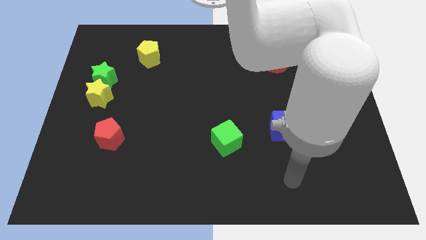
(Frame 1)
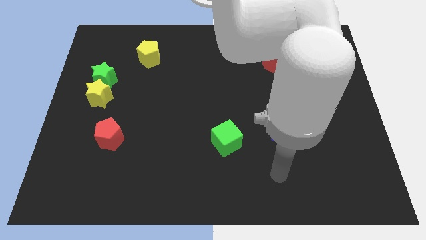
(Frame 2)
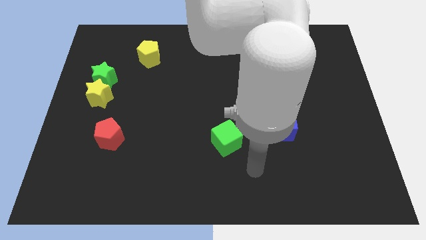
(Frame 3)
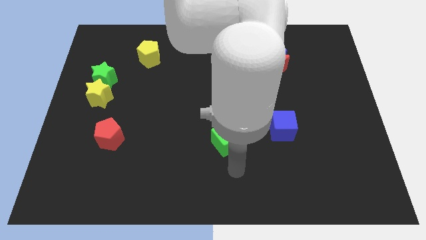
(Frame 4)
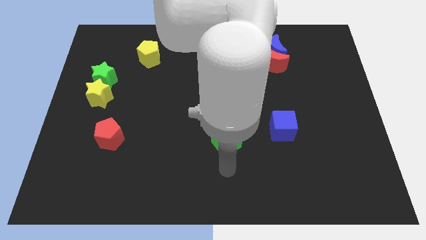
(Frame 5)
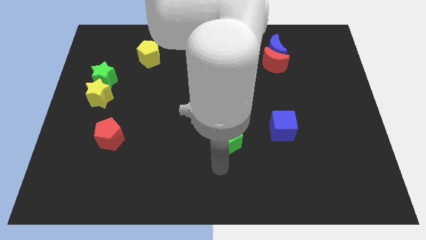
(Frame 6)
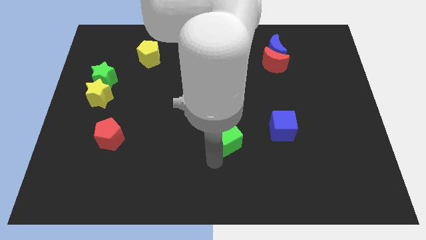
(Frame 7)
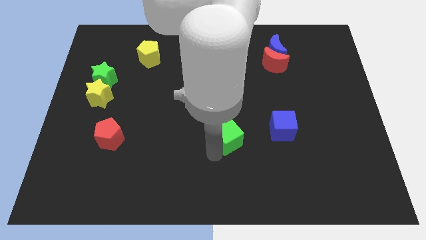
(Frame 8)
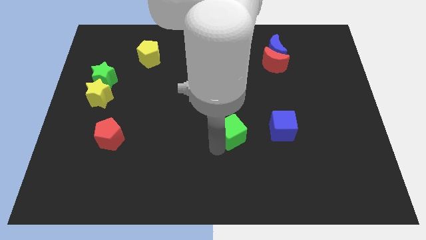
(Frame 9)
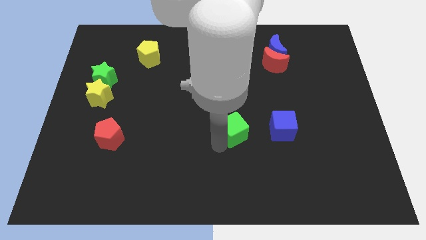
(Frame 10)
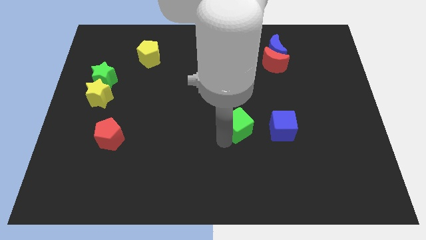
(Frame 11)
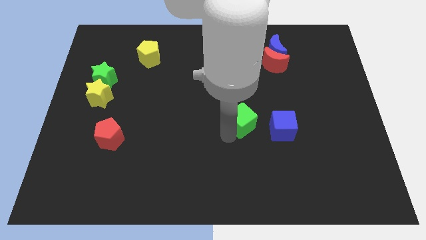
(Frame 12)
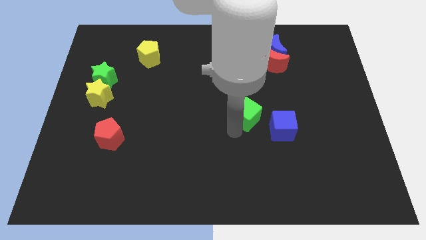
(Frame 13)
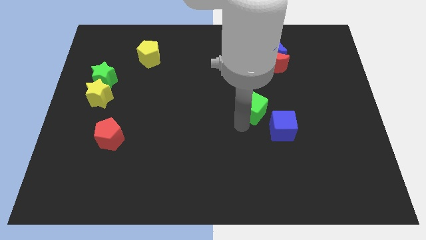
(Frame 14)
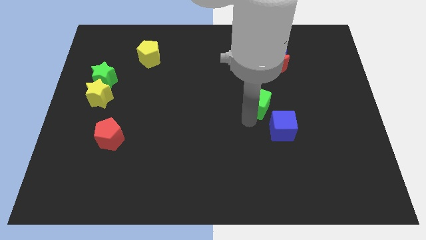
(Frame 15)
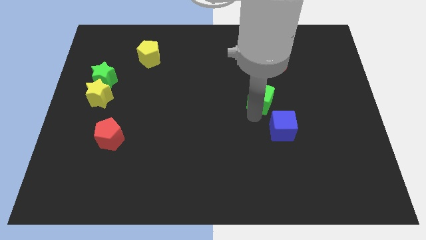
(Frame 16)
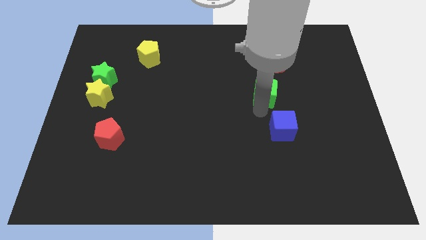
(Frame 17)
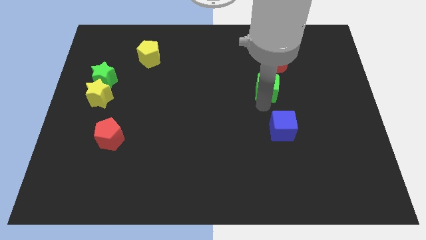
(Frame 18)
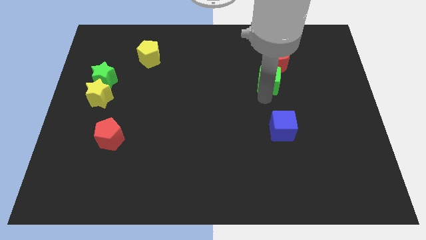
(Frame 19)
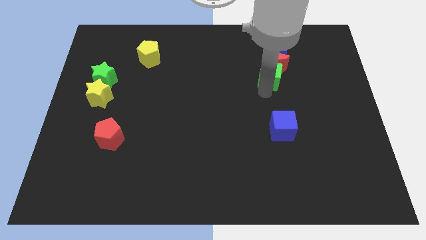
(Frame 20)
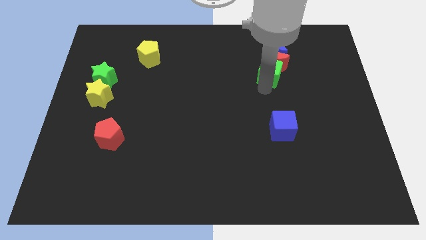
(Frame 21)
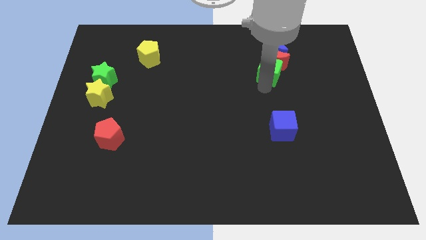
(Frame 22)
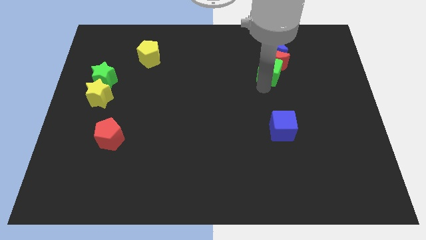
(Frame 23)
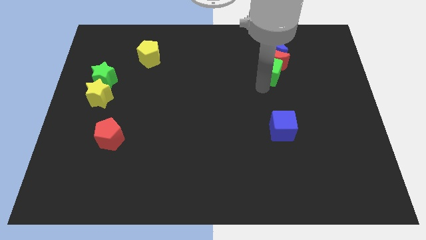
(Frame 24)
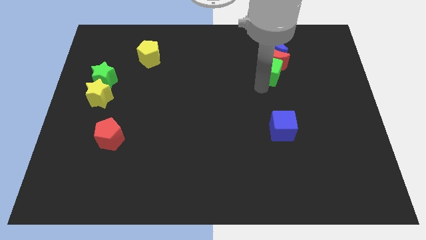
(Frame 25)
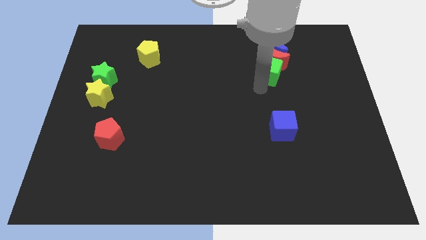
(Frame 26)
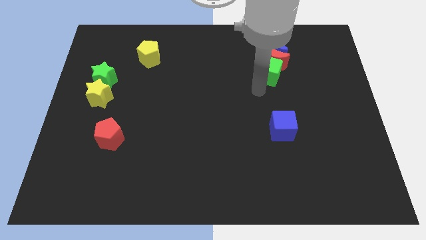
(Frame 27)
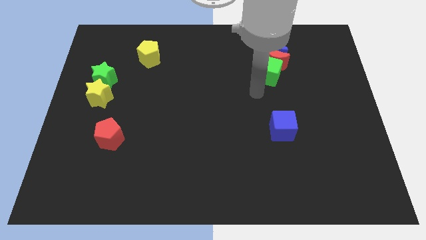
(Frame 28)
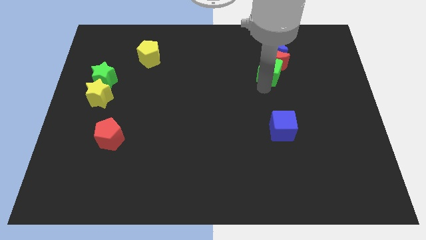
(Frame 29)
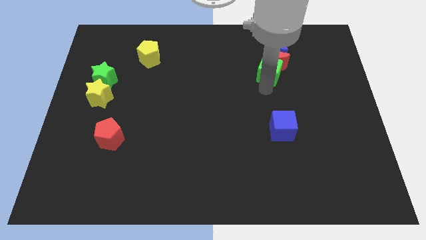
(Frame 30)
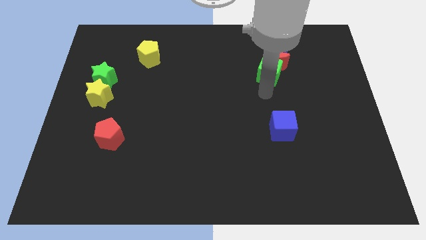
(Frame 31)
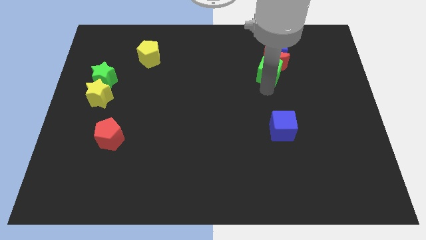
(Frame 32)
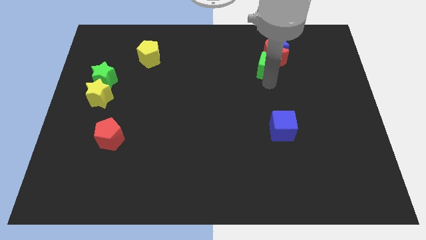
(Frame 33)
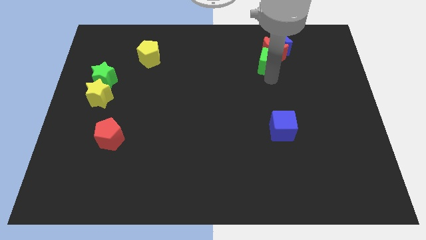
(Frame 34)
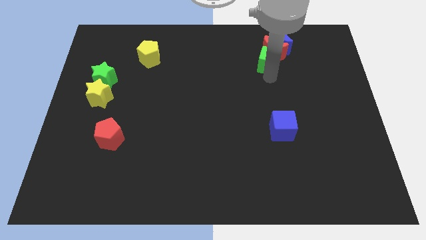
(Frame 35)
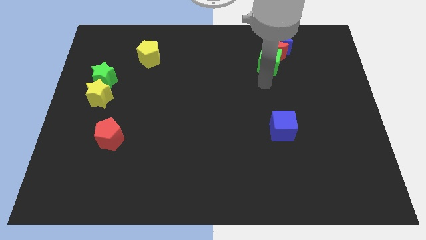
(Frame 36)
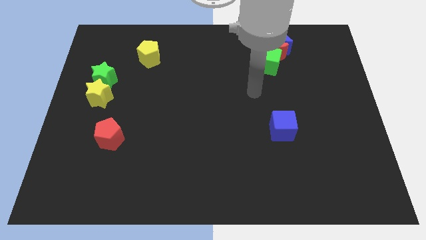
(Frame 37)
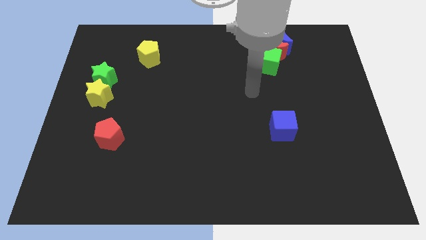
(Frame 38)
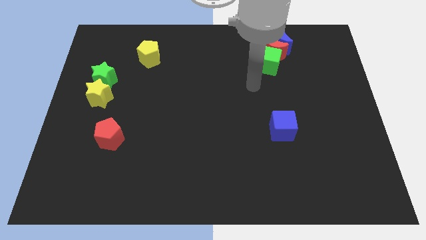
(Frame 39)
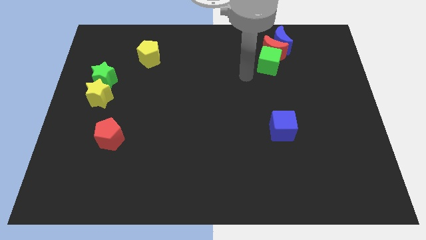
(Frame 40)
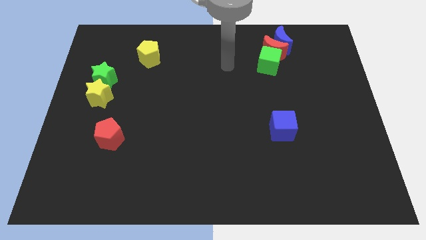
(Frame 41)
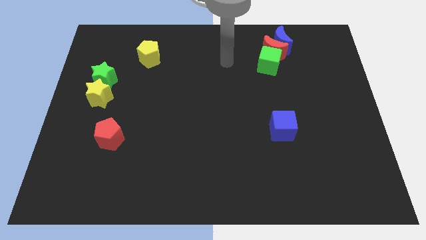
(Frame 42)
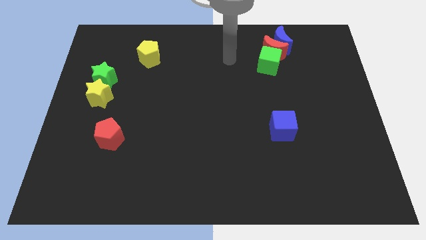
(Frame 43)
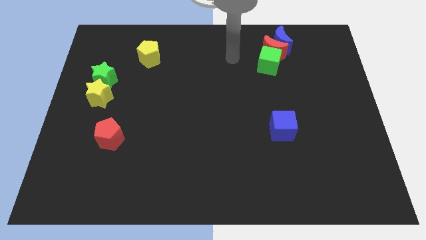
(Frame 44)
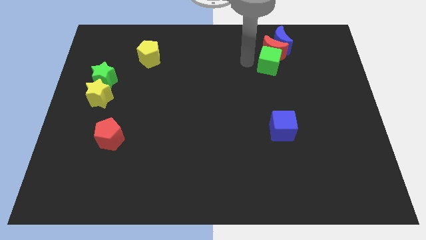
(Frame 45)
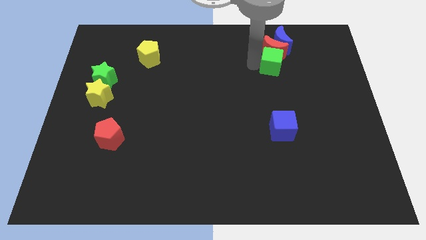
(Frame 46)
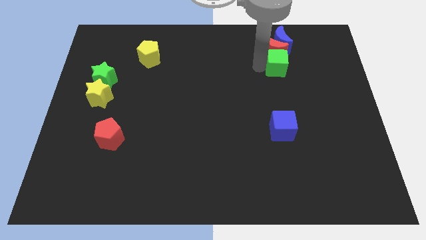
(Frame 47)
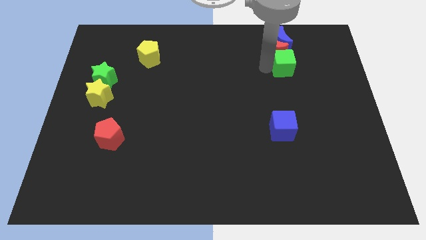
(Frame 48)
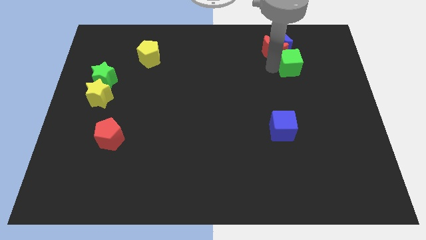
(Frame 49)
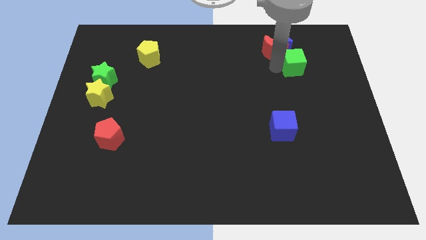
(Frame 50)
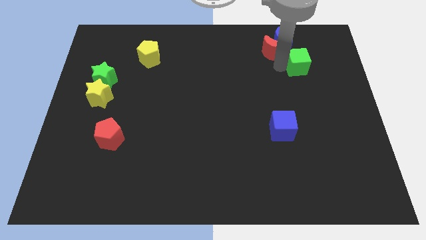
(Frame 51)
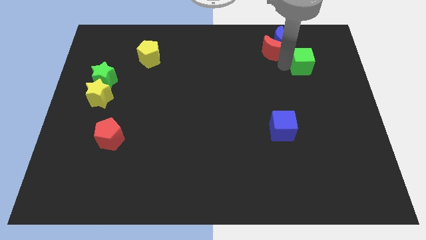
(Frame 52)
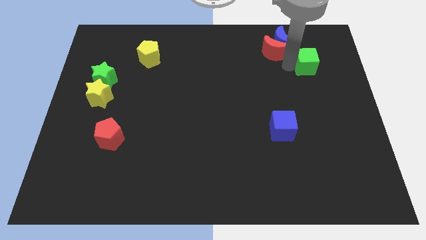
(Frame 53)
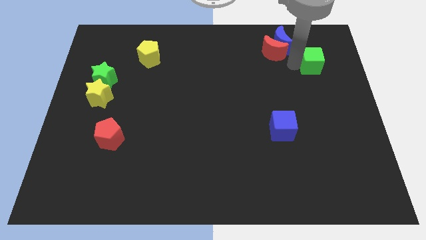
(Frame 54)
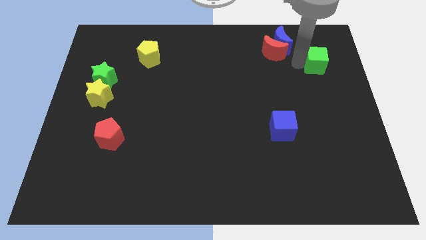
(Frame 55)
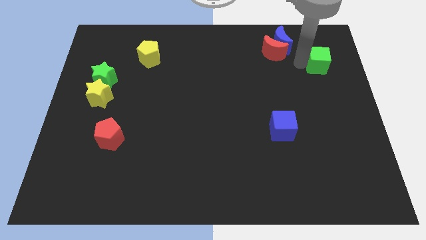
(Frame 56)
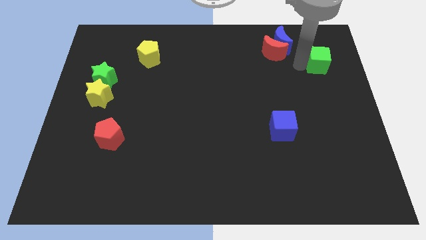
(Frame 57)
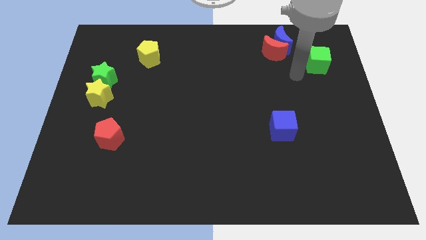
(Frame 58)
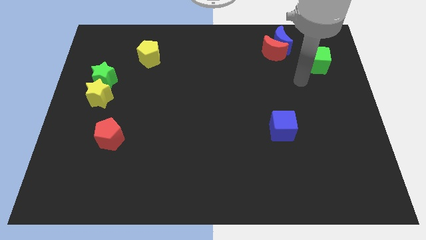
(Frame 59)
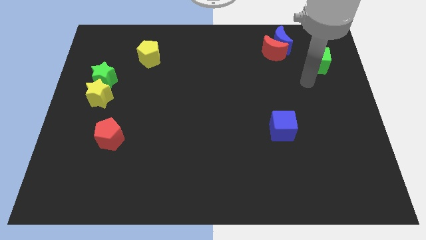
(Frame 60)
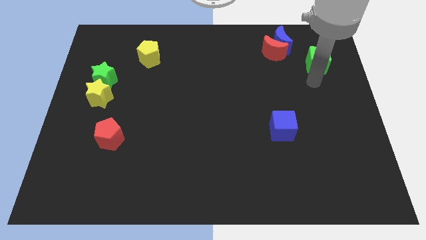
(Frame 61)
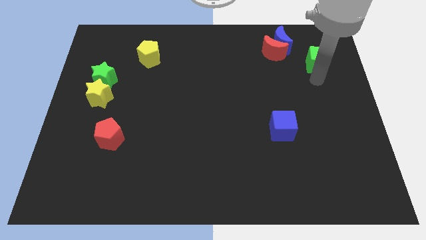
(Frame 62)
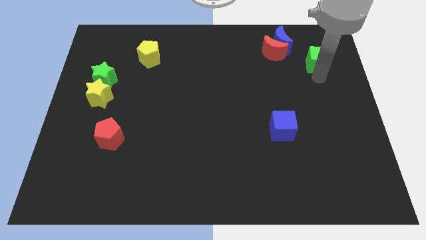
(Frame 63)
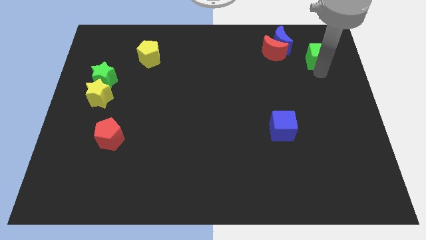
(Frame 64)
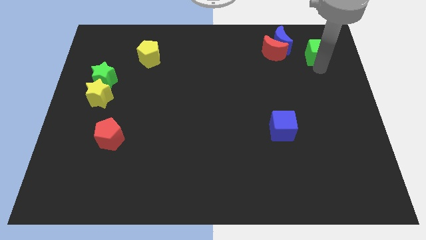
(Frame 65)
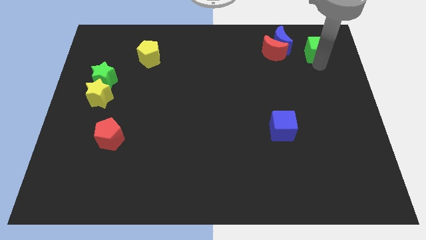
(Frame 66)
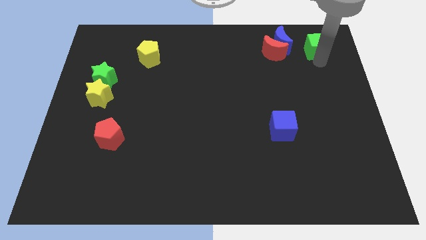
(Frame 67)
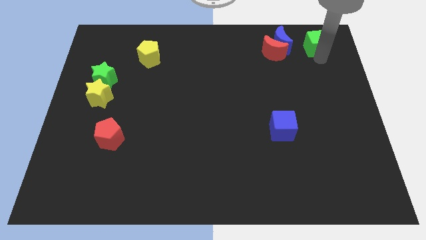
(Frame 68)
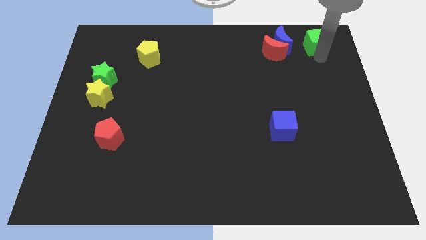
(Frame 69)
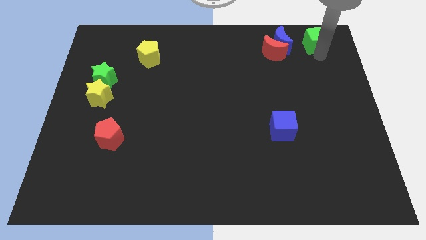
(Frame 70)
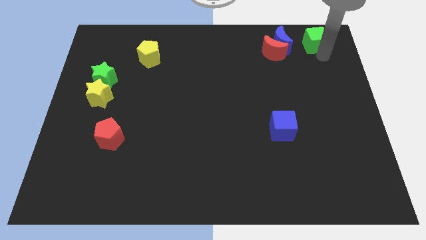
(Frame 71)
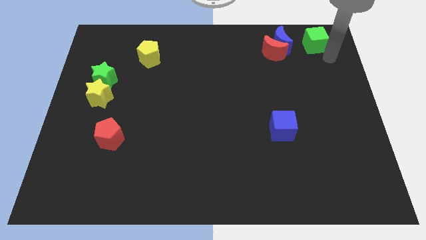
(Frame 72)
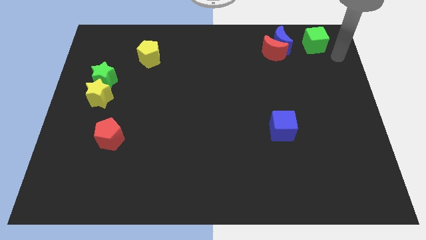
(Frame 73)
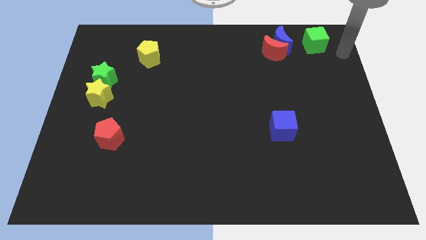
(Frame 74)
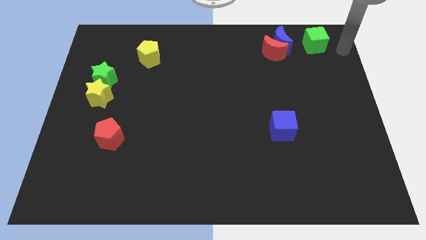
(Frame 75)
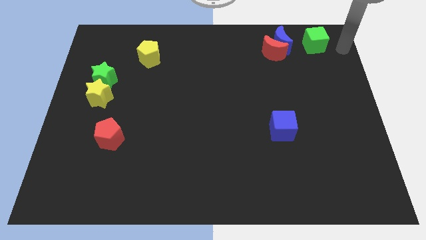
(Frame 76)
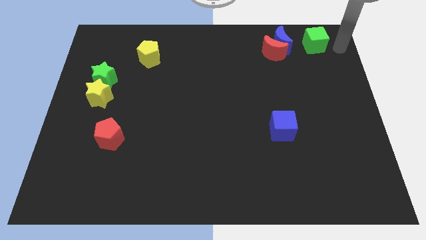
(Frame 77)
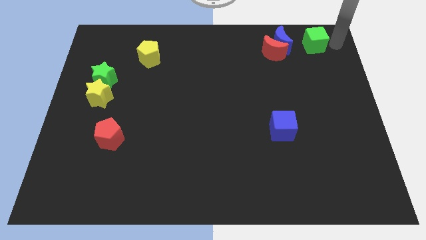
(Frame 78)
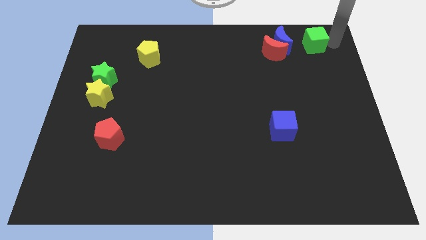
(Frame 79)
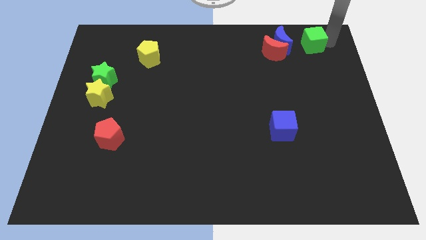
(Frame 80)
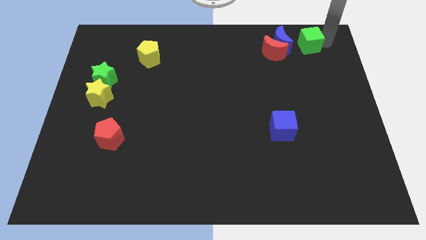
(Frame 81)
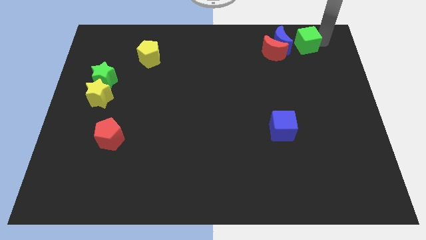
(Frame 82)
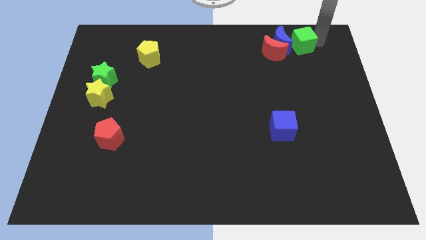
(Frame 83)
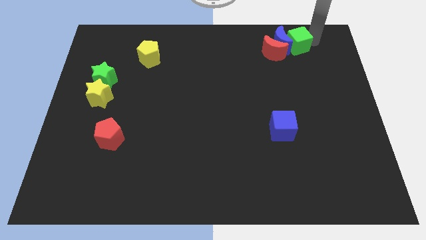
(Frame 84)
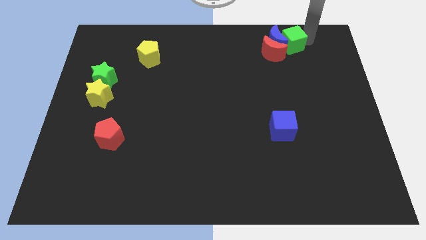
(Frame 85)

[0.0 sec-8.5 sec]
push the green cube towards the blue moon
